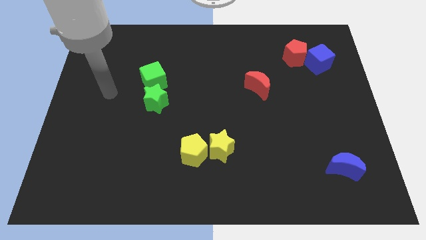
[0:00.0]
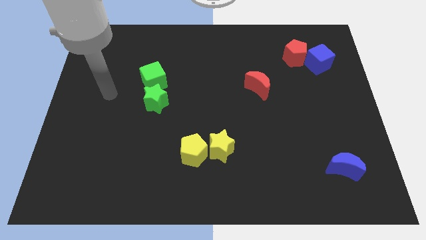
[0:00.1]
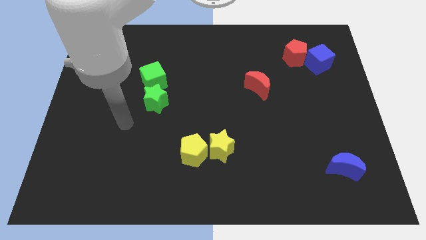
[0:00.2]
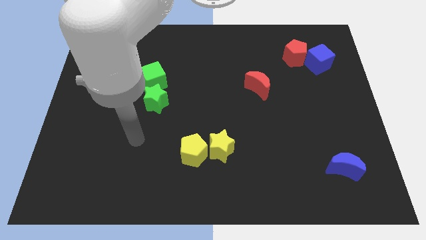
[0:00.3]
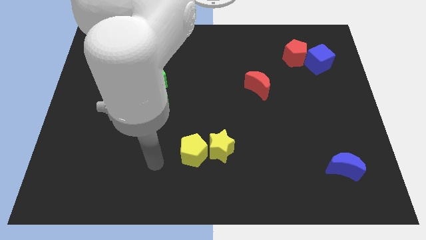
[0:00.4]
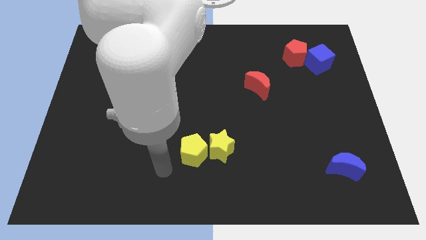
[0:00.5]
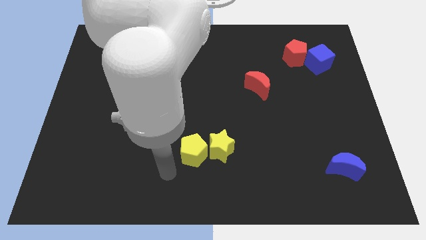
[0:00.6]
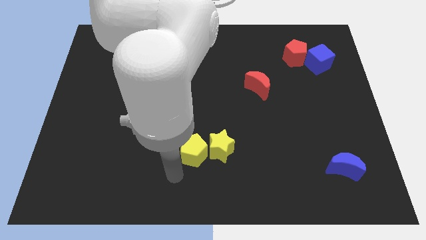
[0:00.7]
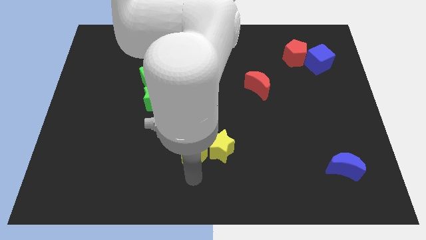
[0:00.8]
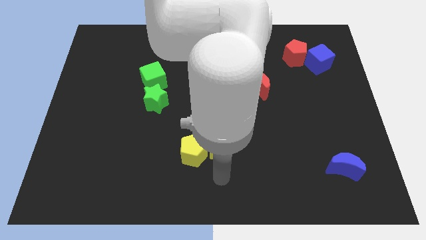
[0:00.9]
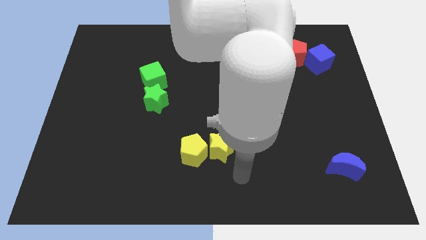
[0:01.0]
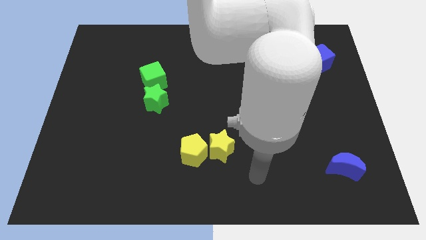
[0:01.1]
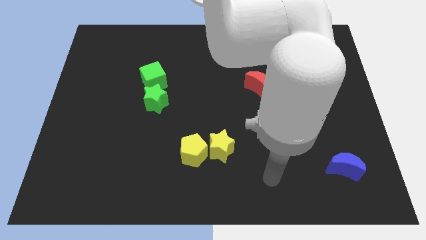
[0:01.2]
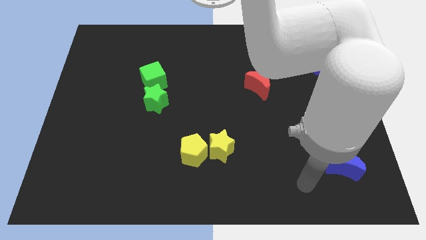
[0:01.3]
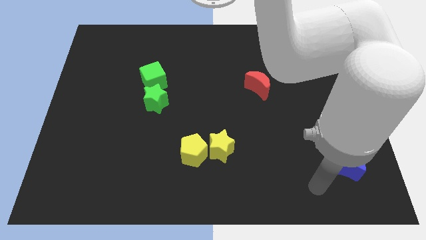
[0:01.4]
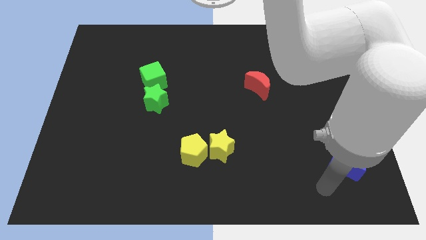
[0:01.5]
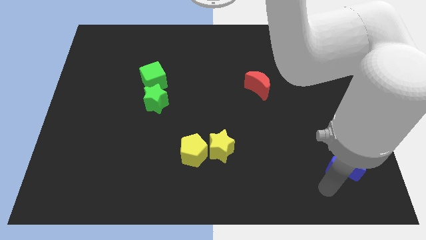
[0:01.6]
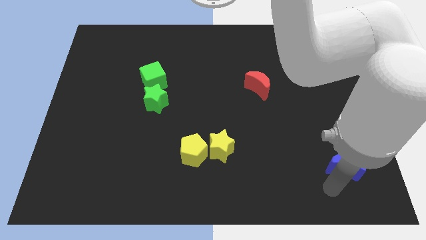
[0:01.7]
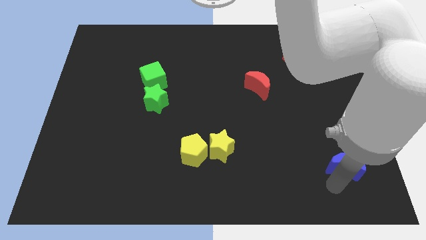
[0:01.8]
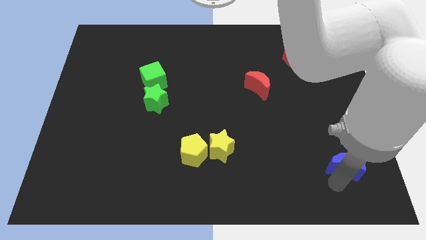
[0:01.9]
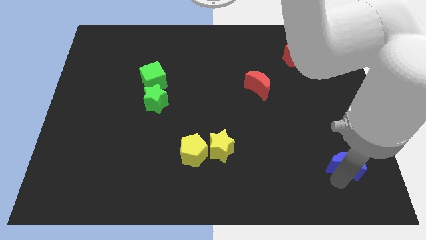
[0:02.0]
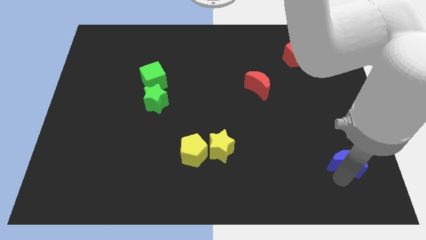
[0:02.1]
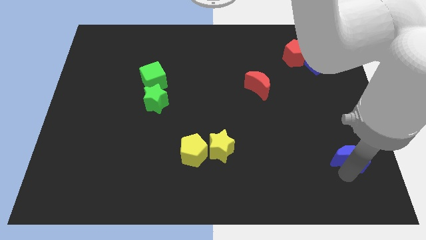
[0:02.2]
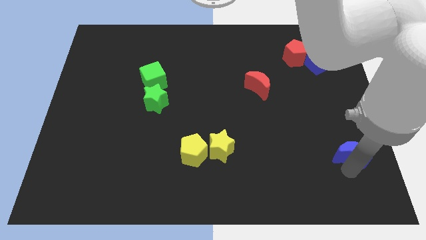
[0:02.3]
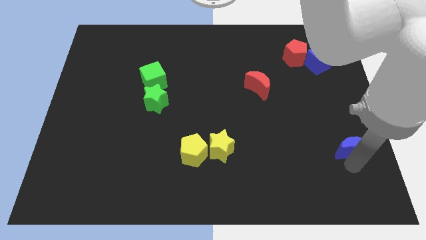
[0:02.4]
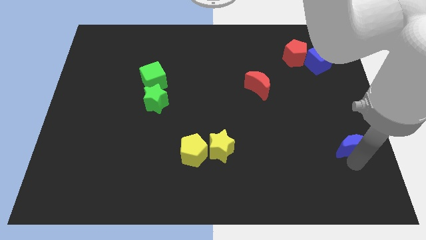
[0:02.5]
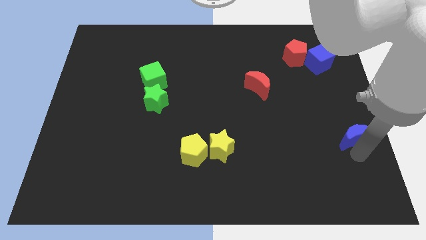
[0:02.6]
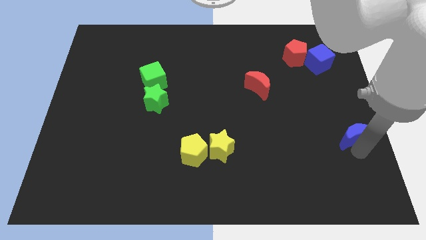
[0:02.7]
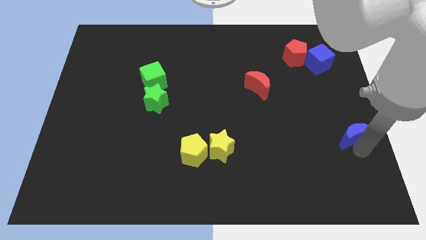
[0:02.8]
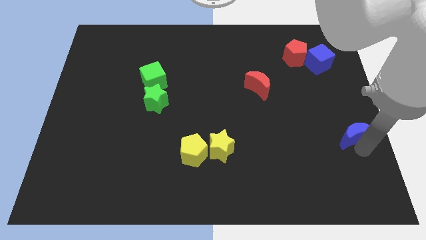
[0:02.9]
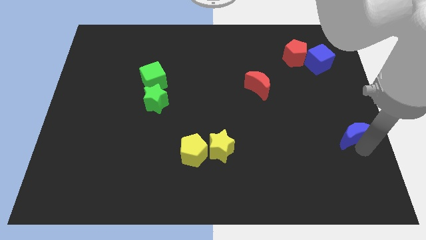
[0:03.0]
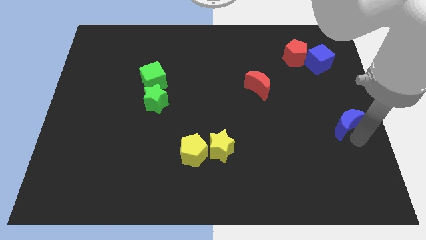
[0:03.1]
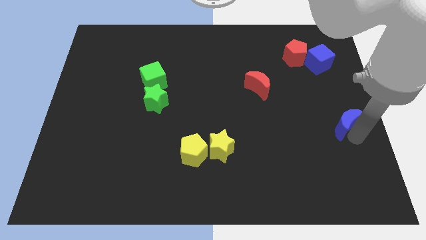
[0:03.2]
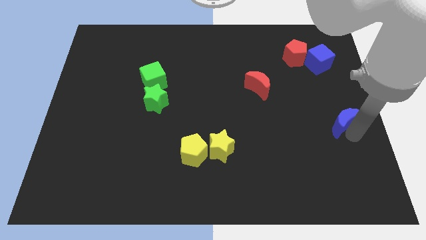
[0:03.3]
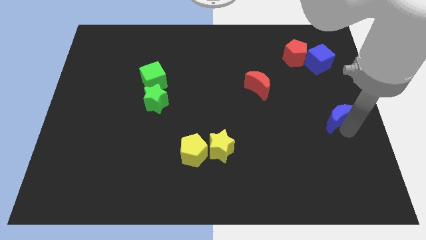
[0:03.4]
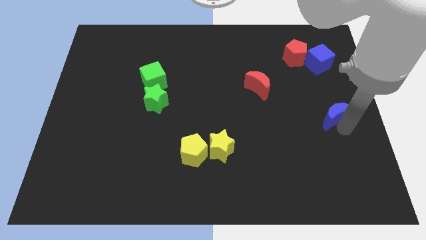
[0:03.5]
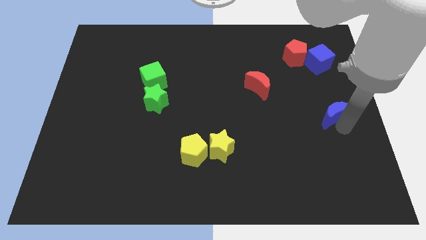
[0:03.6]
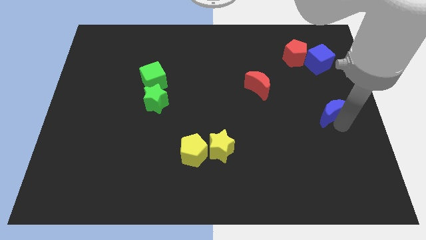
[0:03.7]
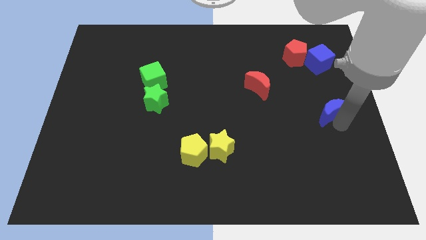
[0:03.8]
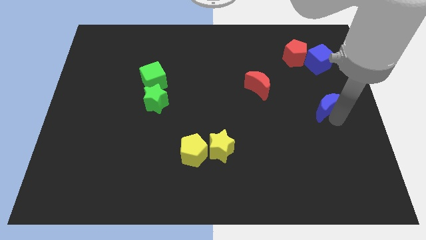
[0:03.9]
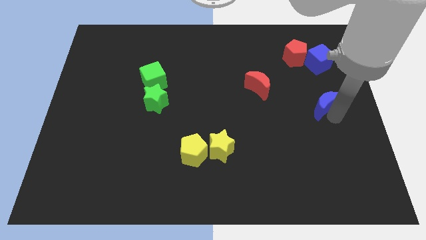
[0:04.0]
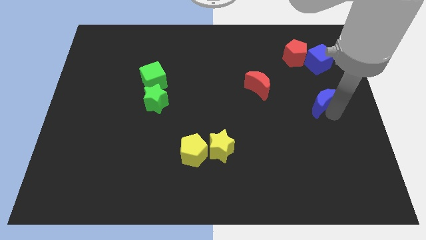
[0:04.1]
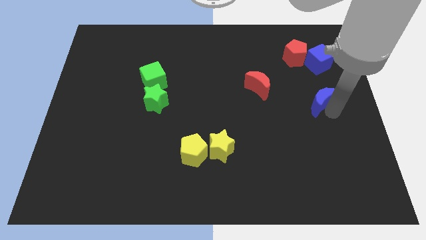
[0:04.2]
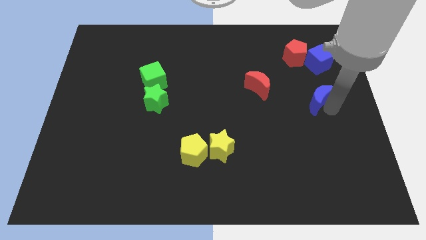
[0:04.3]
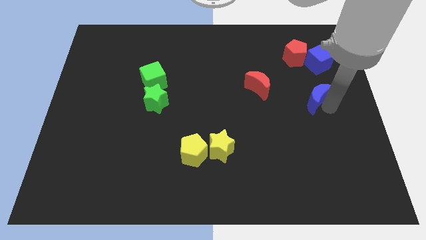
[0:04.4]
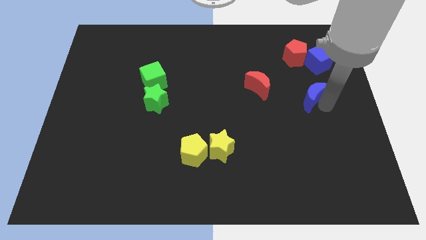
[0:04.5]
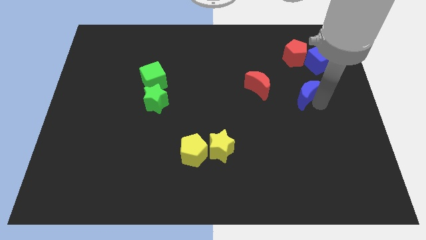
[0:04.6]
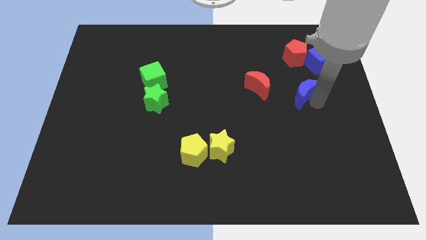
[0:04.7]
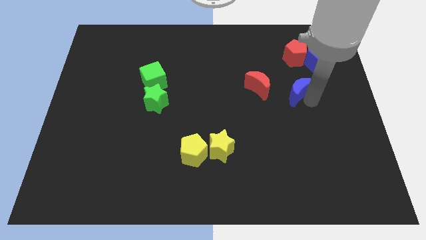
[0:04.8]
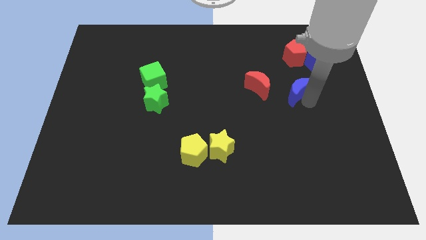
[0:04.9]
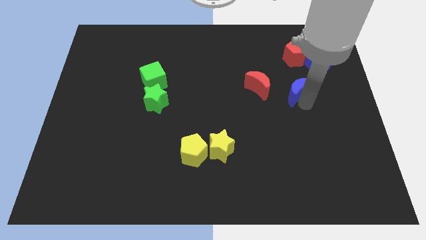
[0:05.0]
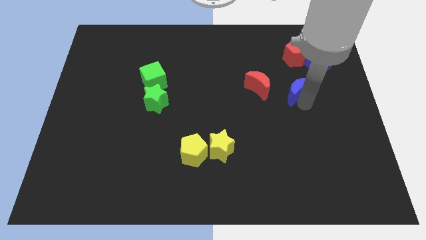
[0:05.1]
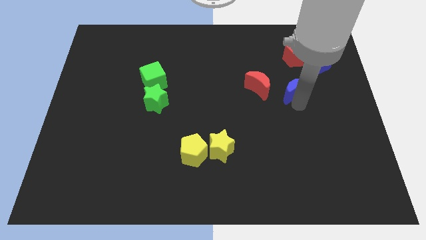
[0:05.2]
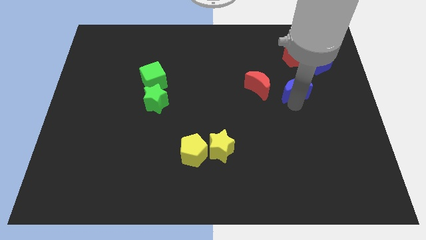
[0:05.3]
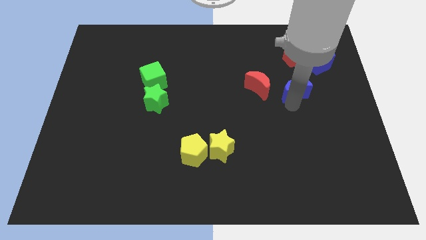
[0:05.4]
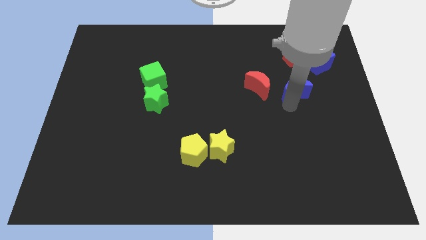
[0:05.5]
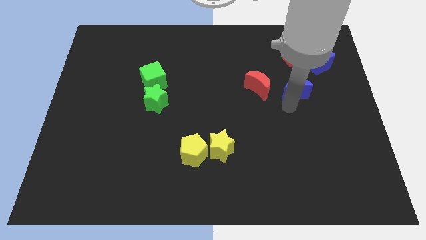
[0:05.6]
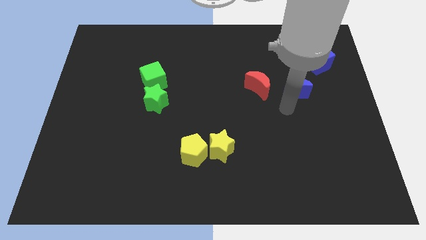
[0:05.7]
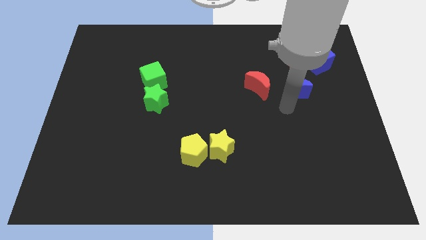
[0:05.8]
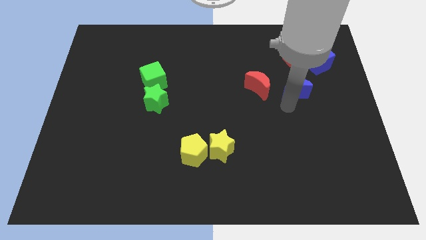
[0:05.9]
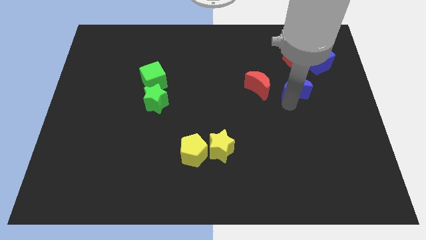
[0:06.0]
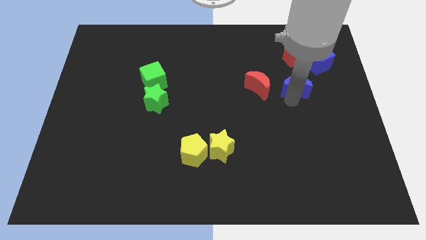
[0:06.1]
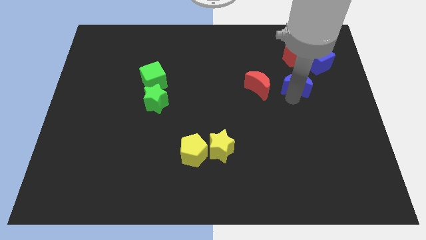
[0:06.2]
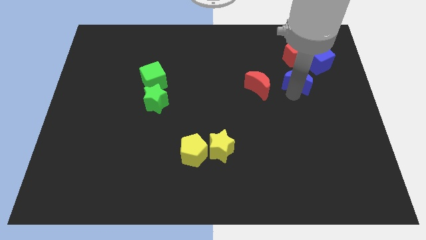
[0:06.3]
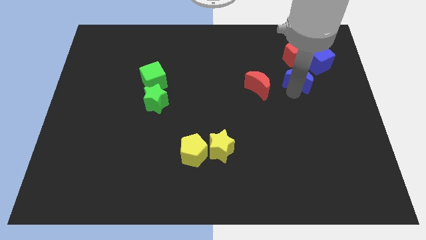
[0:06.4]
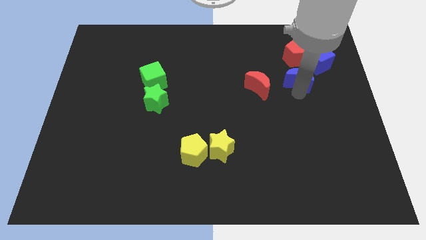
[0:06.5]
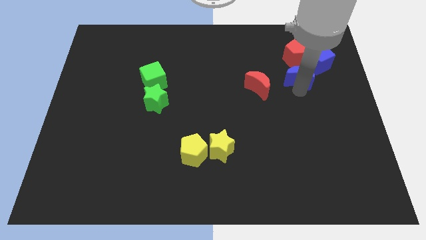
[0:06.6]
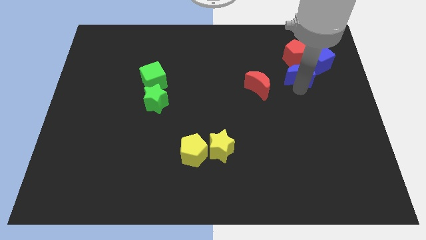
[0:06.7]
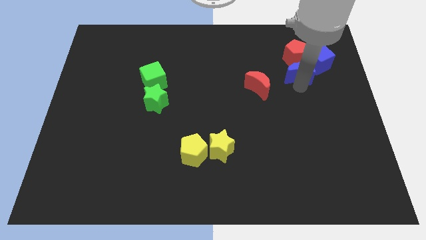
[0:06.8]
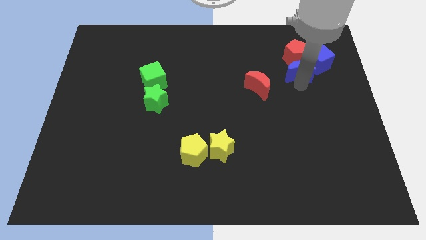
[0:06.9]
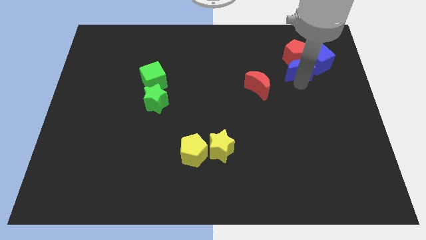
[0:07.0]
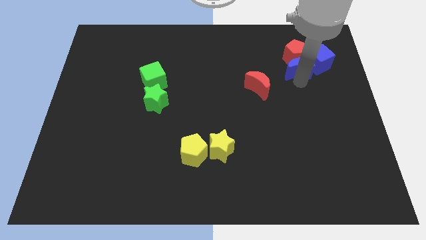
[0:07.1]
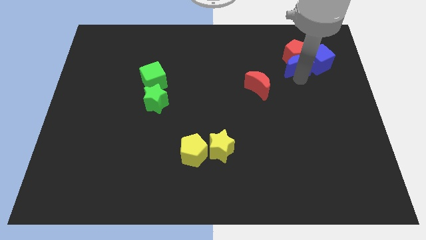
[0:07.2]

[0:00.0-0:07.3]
push the blue moon towards the red pentagon

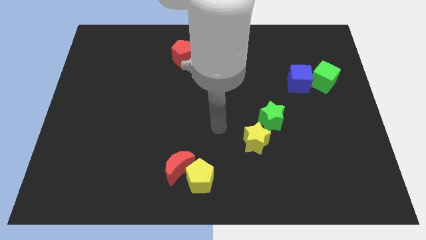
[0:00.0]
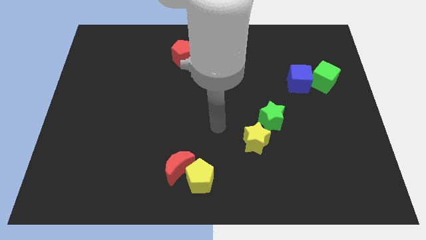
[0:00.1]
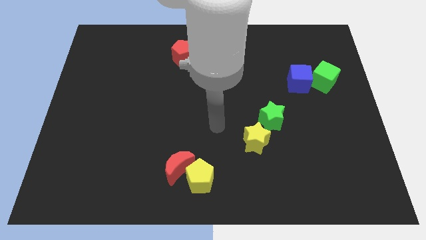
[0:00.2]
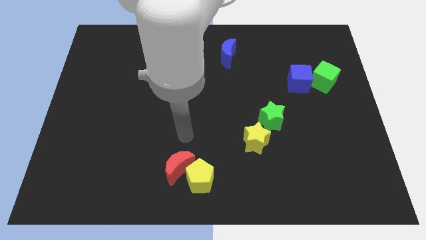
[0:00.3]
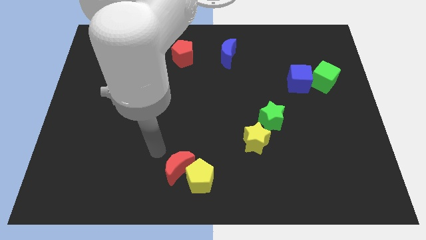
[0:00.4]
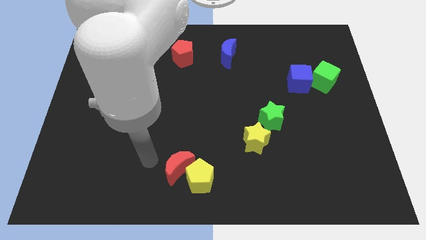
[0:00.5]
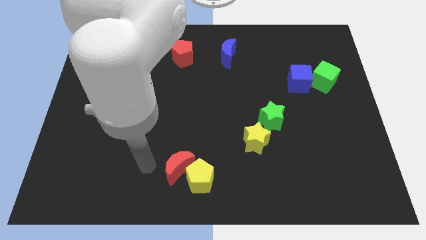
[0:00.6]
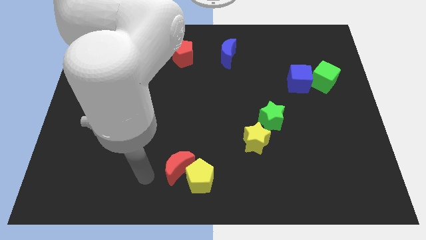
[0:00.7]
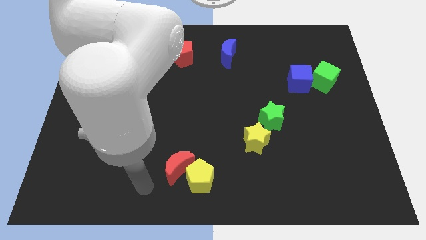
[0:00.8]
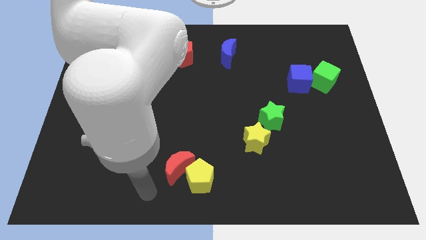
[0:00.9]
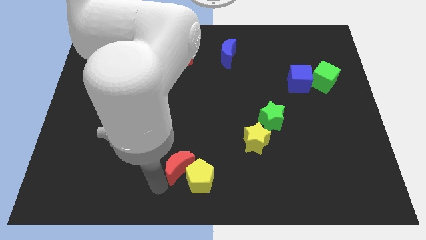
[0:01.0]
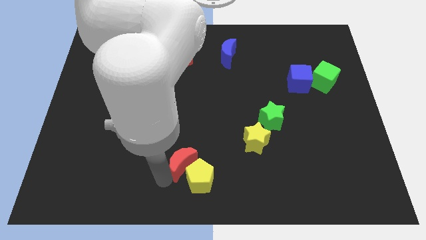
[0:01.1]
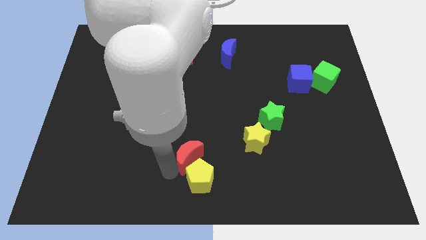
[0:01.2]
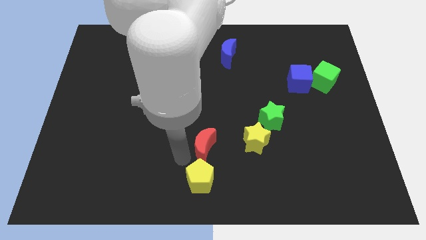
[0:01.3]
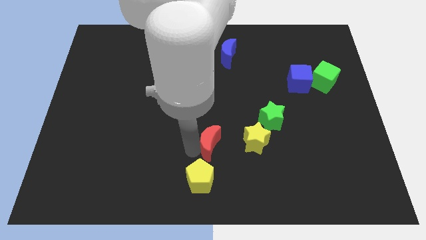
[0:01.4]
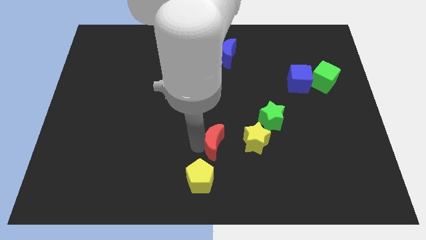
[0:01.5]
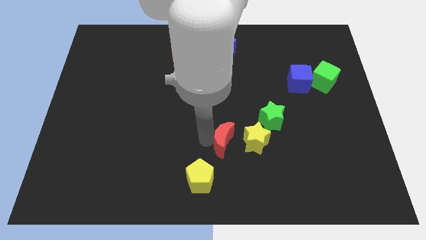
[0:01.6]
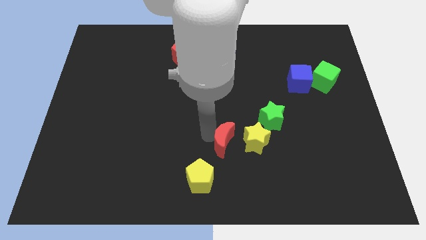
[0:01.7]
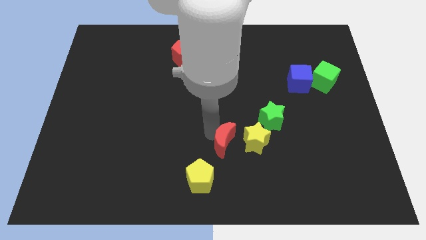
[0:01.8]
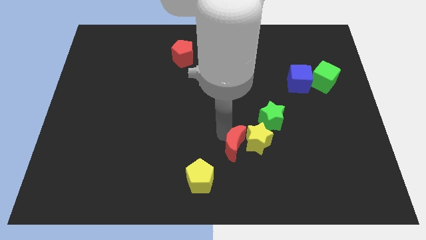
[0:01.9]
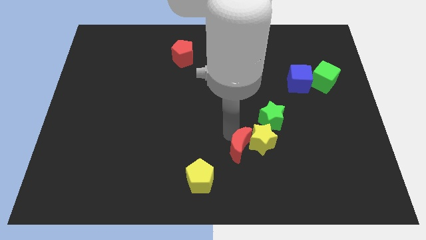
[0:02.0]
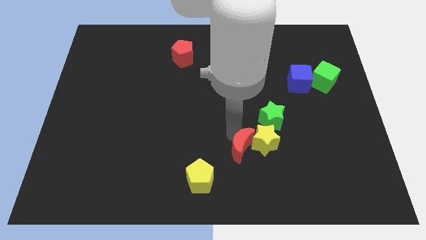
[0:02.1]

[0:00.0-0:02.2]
put the red moon next to the yellow star
